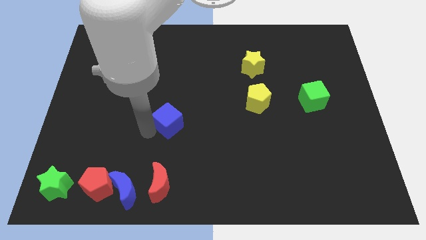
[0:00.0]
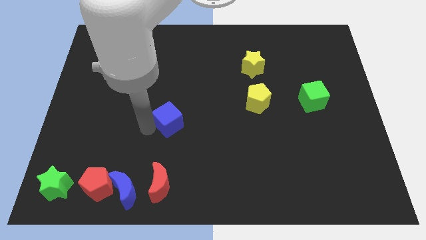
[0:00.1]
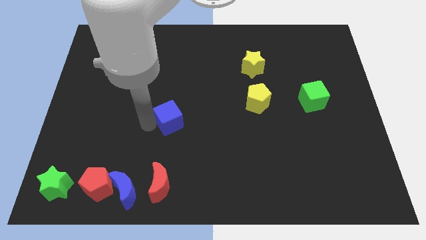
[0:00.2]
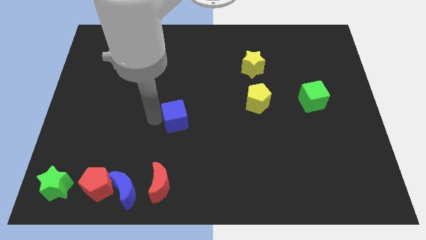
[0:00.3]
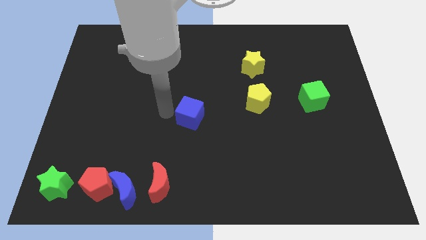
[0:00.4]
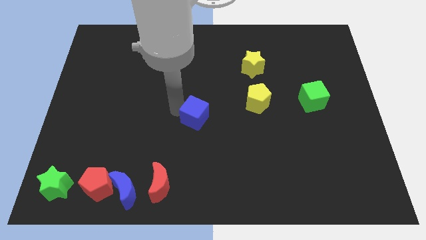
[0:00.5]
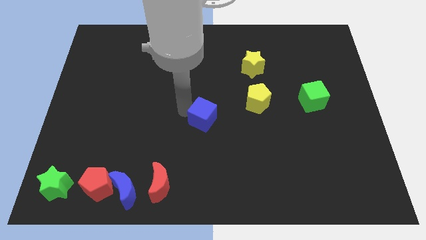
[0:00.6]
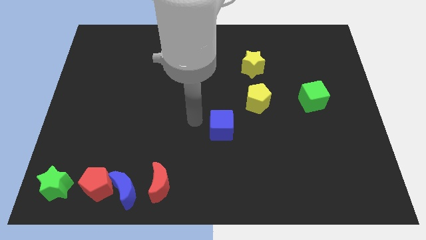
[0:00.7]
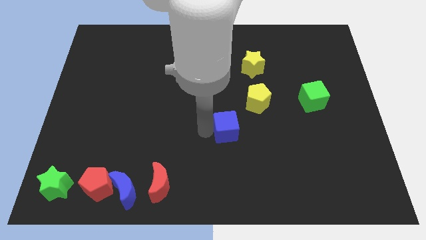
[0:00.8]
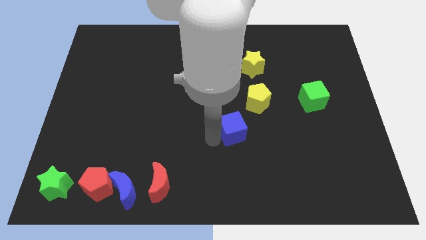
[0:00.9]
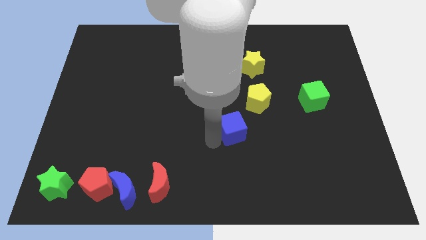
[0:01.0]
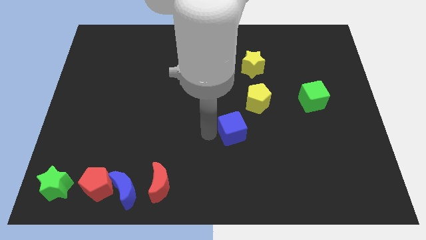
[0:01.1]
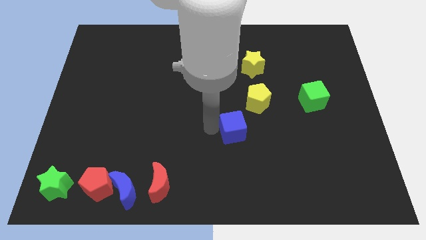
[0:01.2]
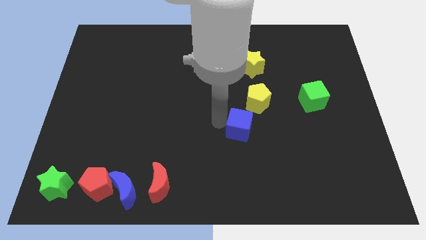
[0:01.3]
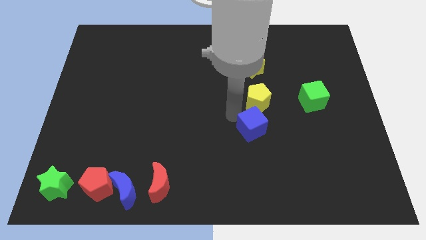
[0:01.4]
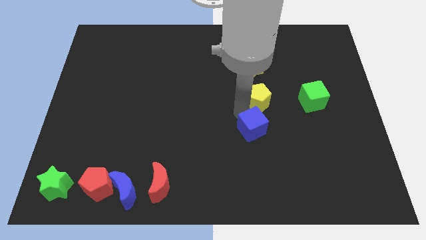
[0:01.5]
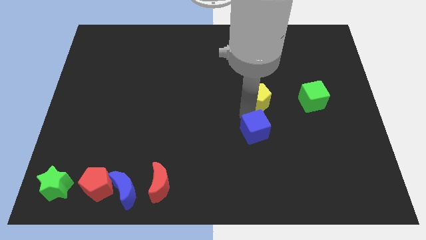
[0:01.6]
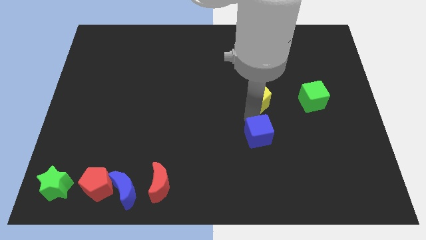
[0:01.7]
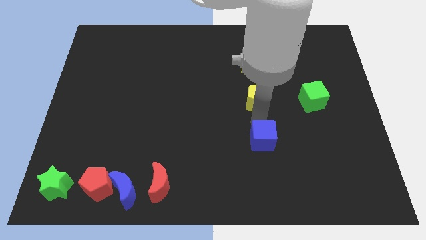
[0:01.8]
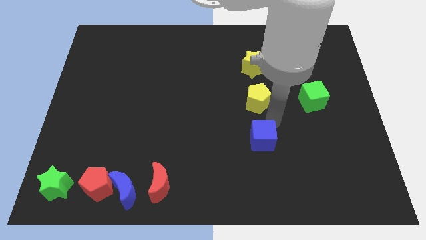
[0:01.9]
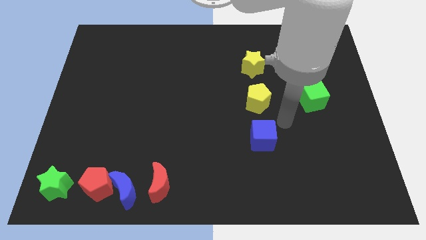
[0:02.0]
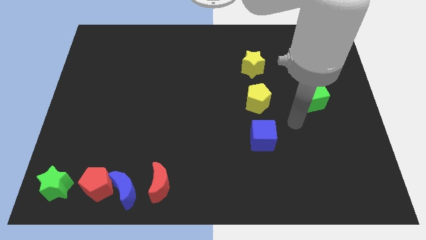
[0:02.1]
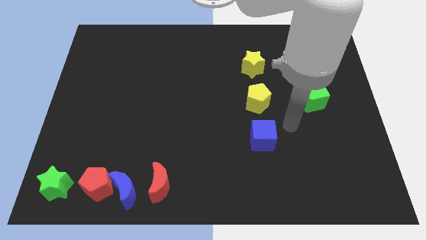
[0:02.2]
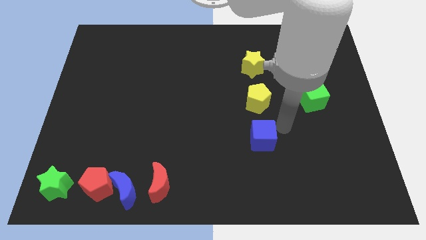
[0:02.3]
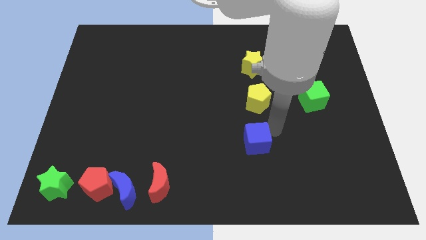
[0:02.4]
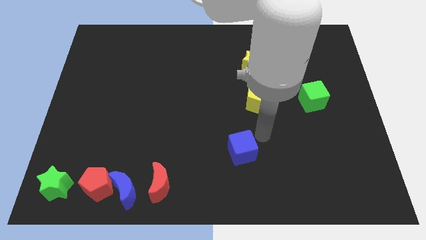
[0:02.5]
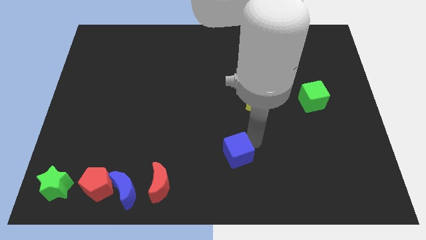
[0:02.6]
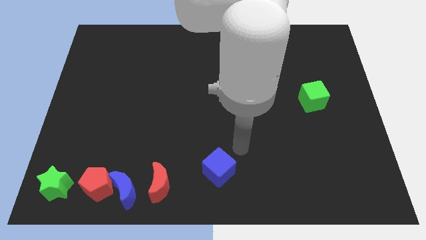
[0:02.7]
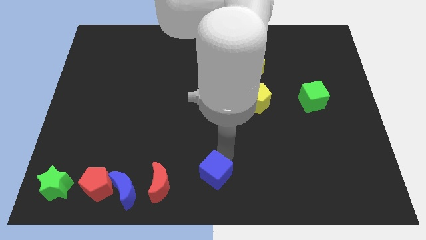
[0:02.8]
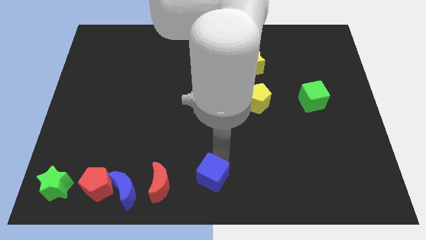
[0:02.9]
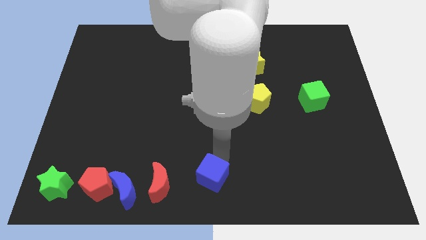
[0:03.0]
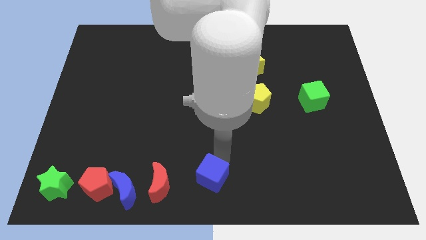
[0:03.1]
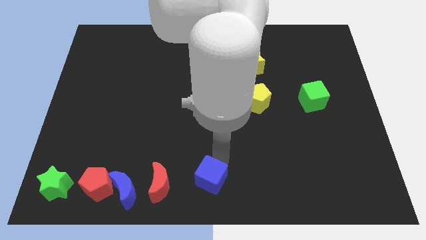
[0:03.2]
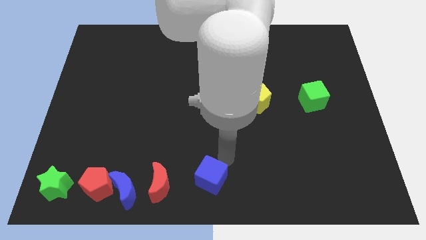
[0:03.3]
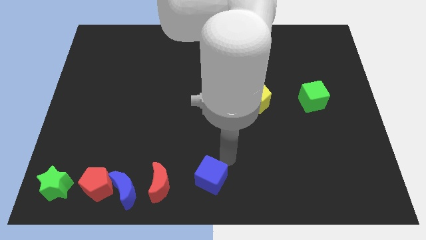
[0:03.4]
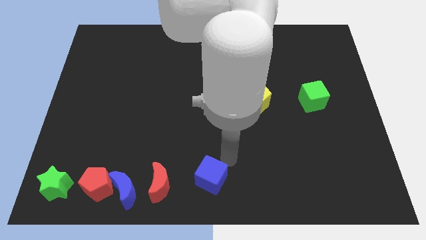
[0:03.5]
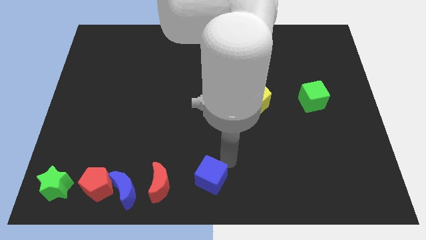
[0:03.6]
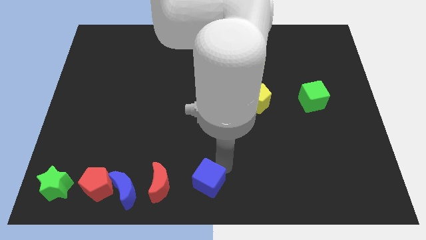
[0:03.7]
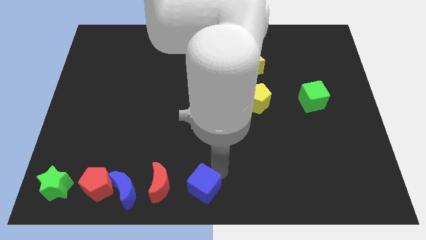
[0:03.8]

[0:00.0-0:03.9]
move the blue cube to the bottom center of the board

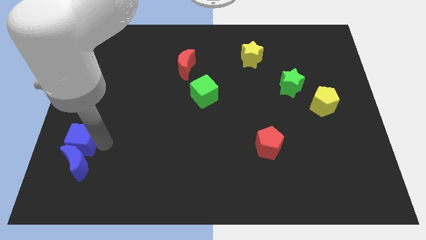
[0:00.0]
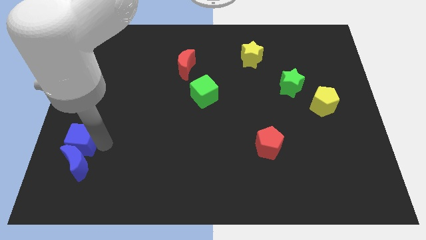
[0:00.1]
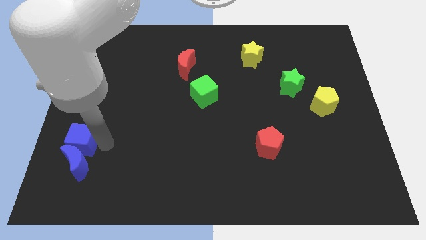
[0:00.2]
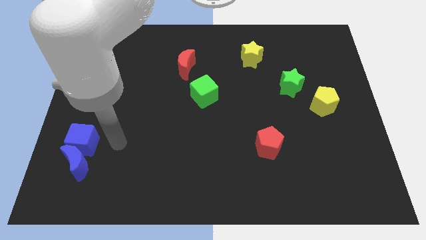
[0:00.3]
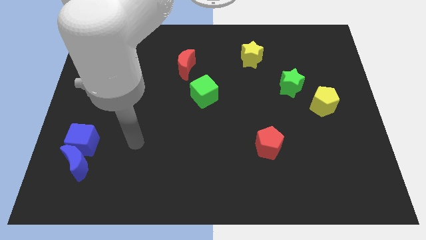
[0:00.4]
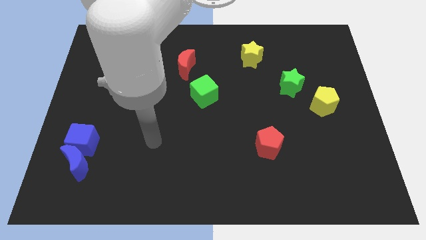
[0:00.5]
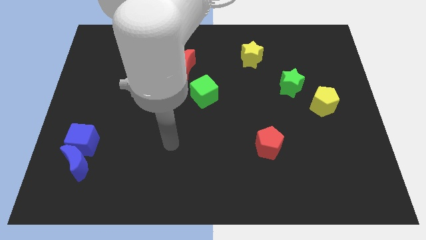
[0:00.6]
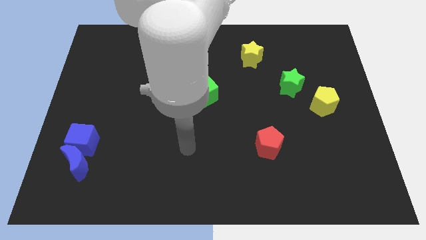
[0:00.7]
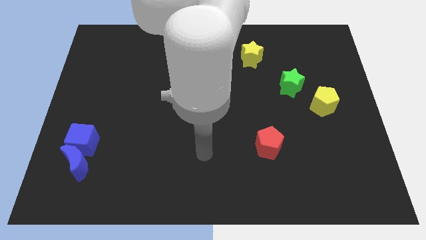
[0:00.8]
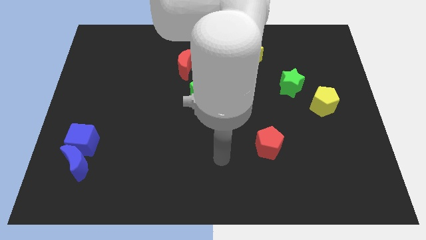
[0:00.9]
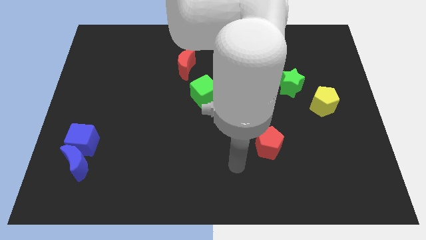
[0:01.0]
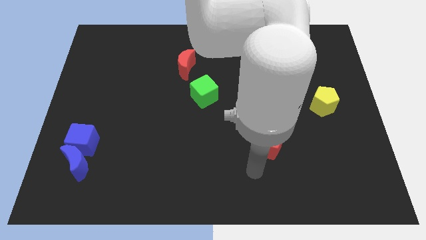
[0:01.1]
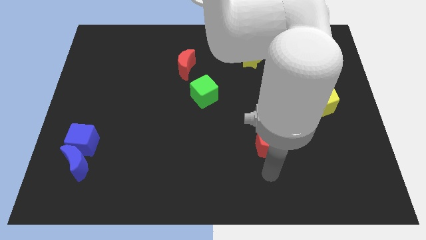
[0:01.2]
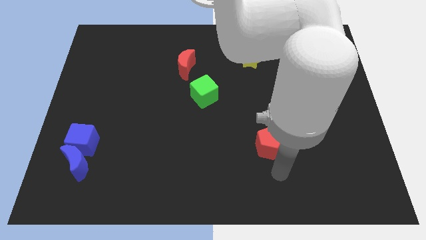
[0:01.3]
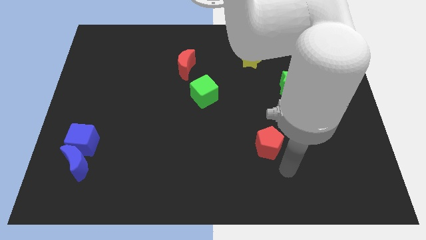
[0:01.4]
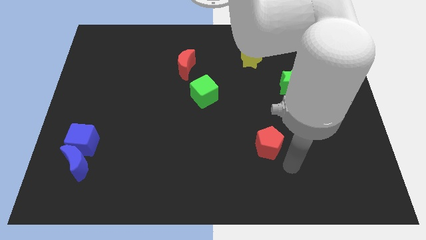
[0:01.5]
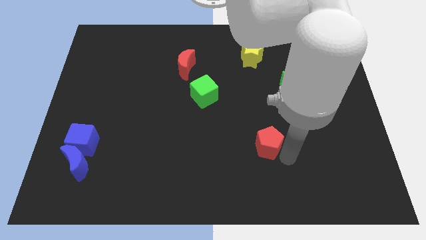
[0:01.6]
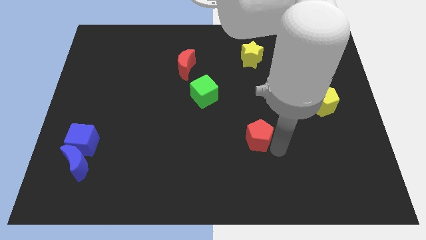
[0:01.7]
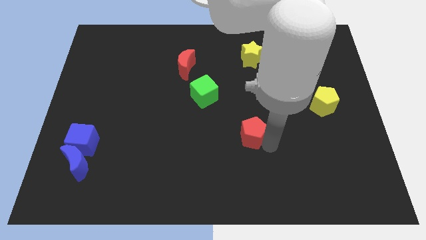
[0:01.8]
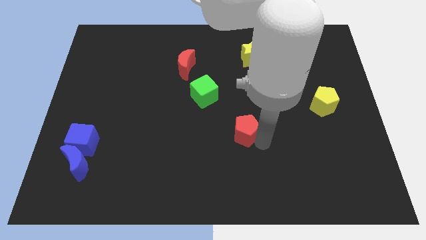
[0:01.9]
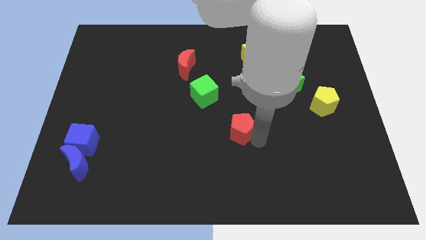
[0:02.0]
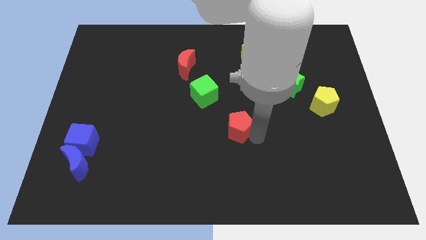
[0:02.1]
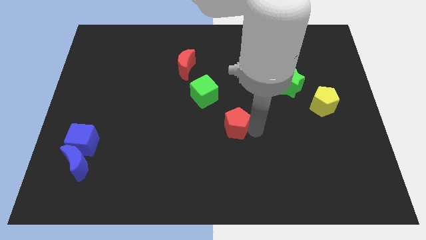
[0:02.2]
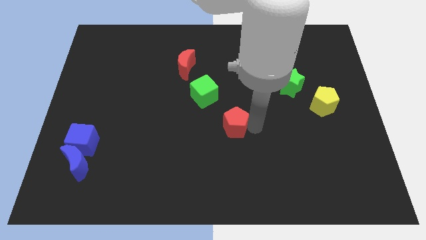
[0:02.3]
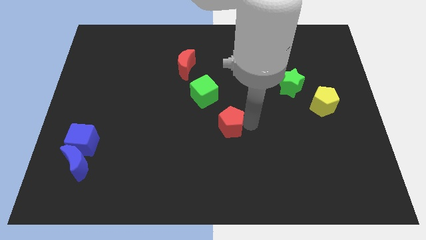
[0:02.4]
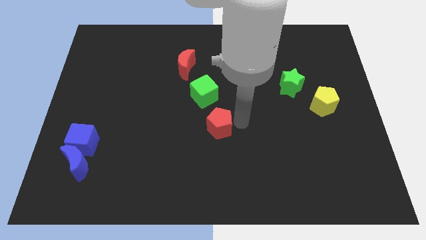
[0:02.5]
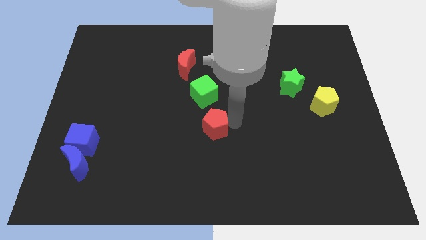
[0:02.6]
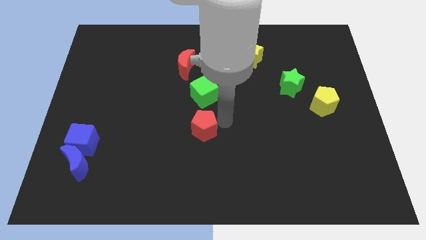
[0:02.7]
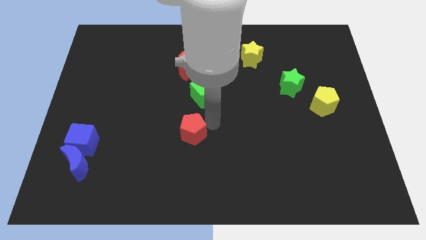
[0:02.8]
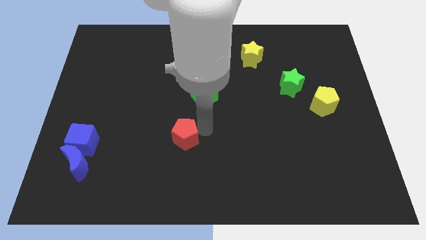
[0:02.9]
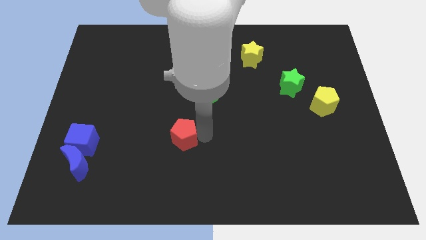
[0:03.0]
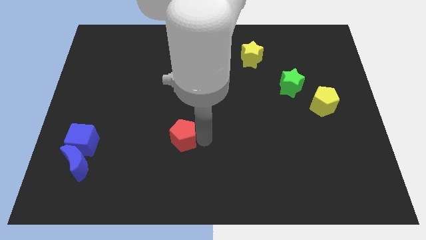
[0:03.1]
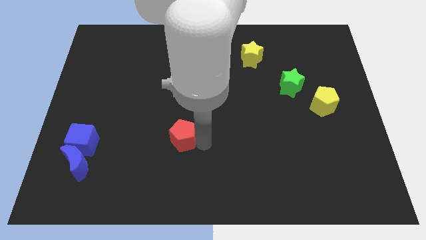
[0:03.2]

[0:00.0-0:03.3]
move the red pentagon to the bottom side of the green cube

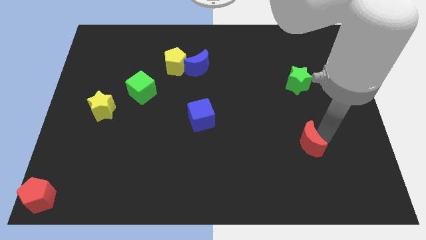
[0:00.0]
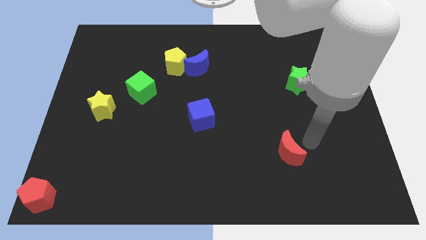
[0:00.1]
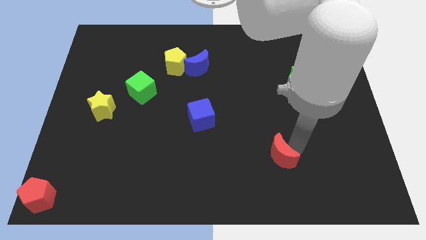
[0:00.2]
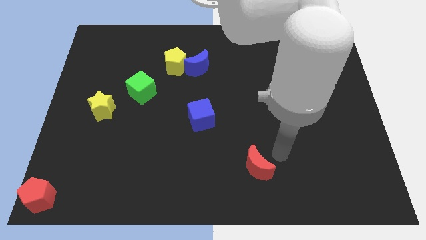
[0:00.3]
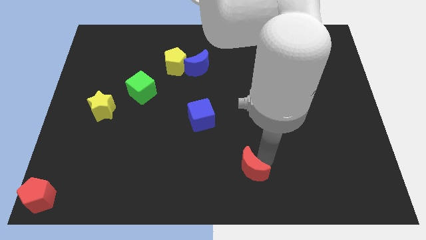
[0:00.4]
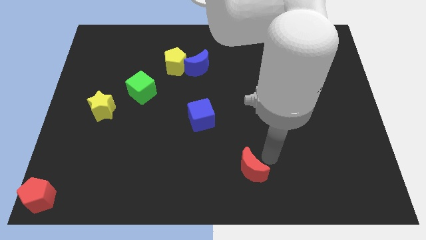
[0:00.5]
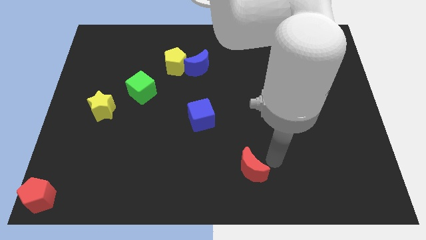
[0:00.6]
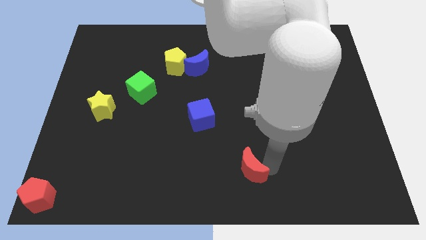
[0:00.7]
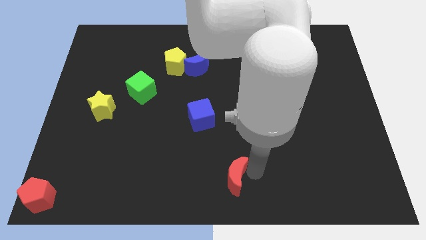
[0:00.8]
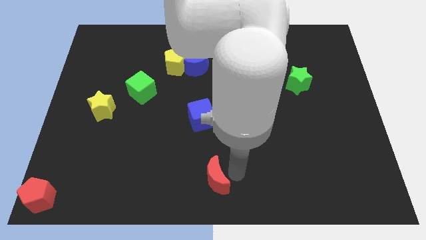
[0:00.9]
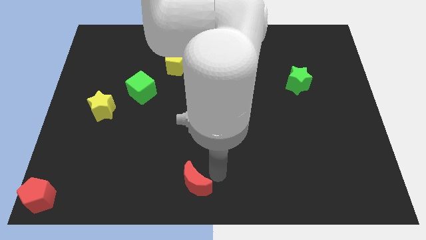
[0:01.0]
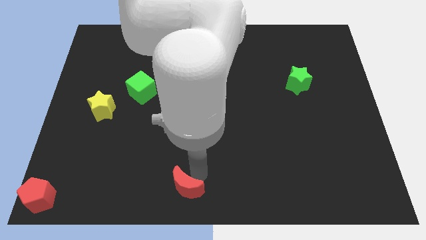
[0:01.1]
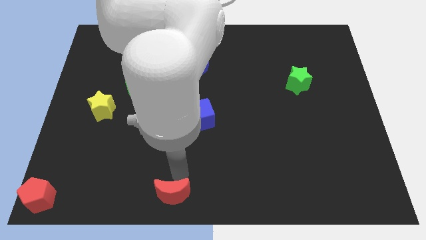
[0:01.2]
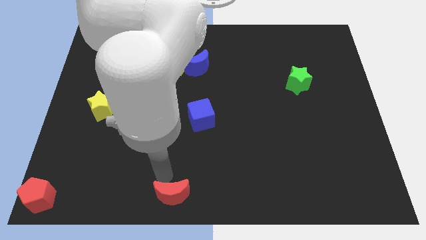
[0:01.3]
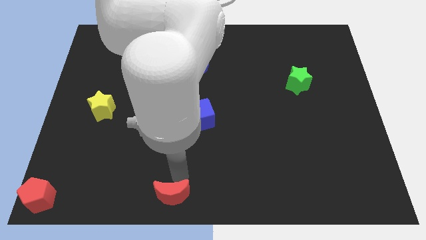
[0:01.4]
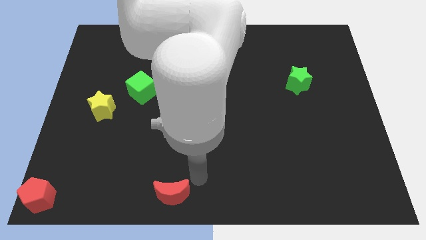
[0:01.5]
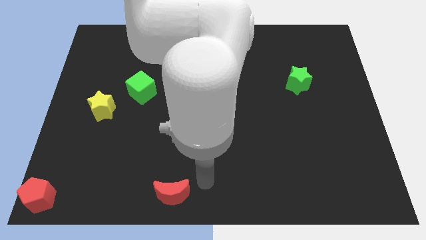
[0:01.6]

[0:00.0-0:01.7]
move the red moon parallel right to the red pentagon

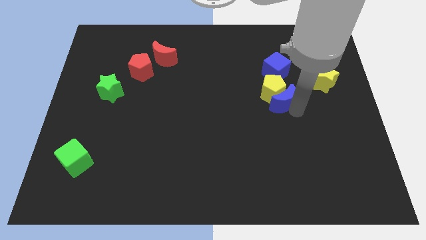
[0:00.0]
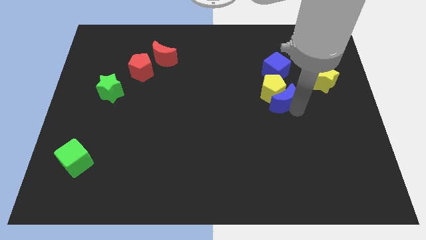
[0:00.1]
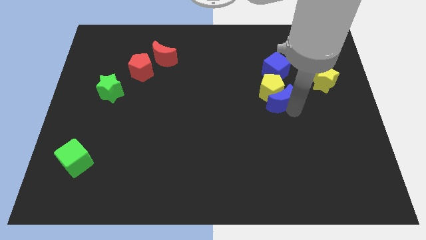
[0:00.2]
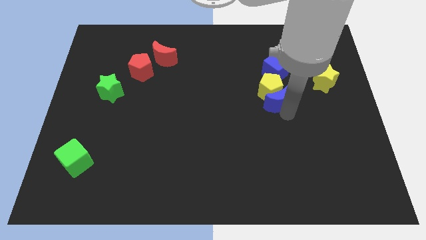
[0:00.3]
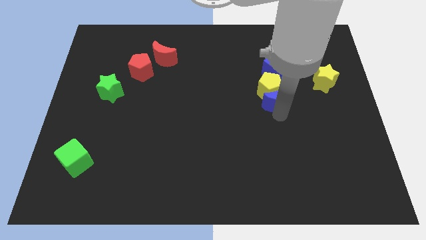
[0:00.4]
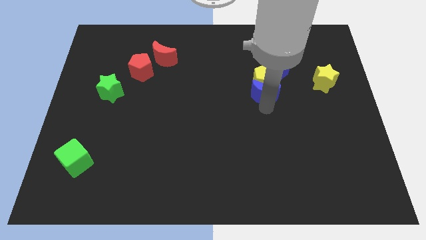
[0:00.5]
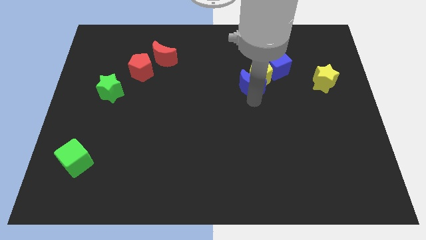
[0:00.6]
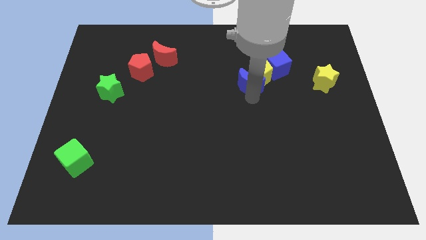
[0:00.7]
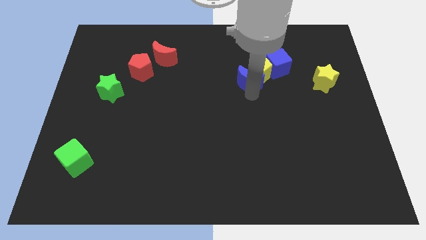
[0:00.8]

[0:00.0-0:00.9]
make the yellow pentagon to touch the blue cube
